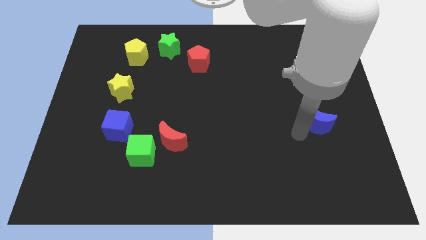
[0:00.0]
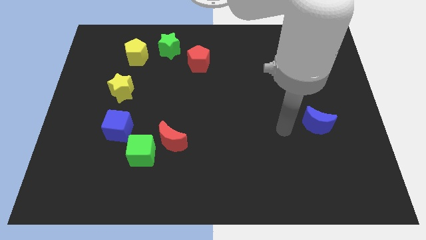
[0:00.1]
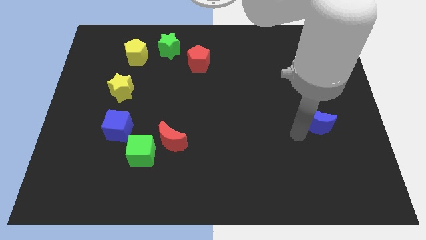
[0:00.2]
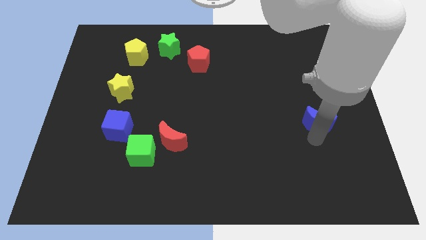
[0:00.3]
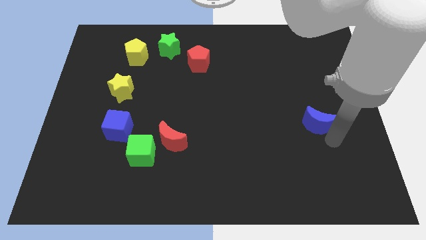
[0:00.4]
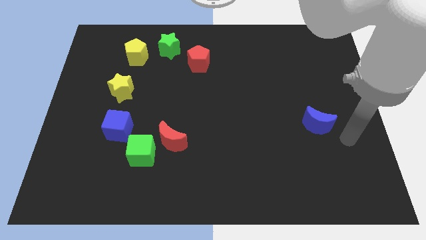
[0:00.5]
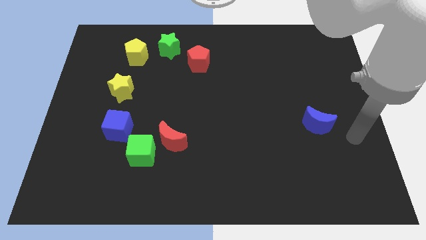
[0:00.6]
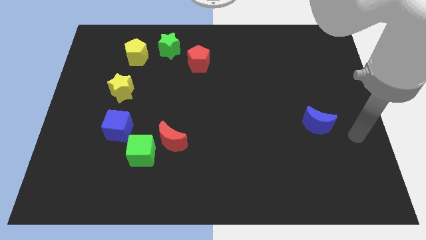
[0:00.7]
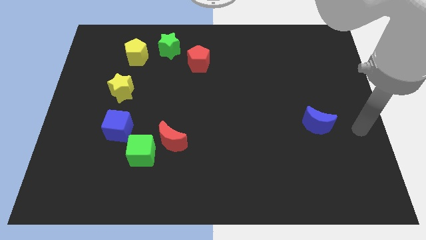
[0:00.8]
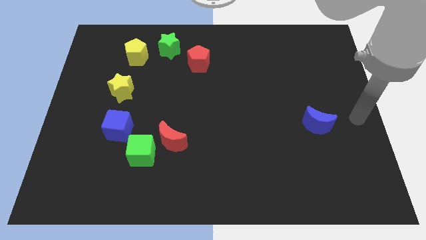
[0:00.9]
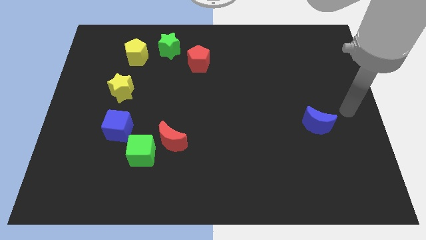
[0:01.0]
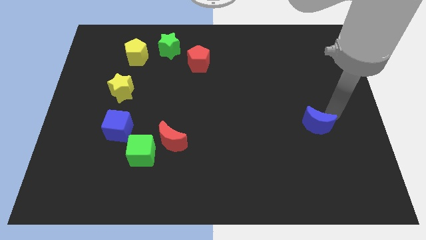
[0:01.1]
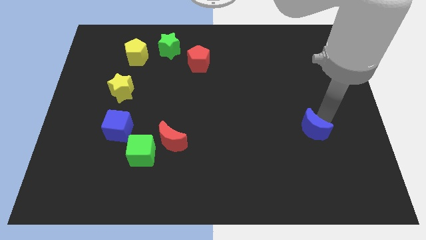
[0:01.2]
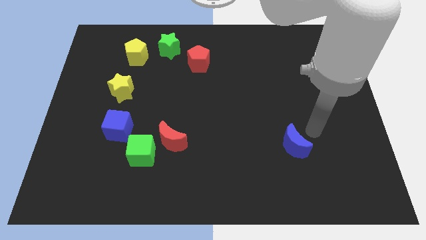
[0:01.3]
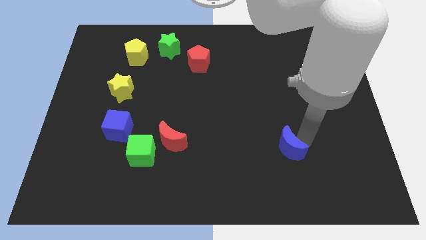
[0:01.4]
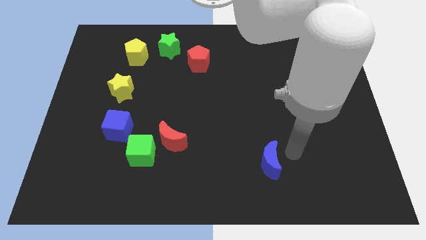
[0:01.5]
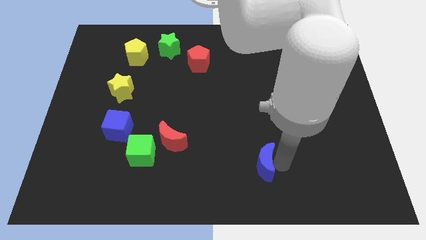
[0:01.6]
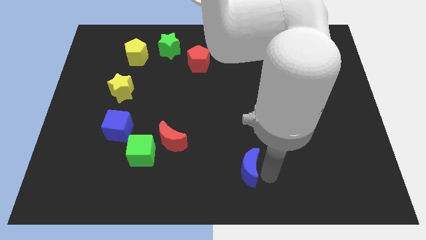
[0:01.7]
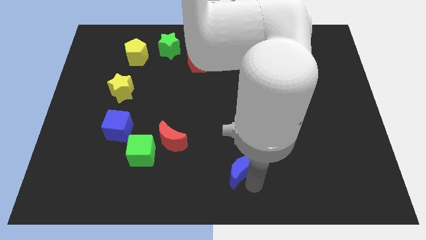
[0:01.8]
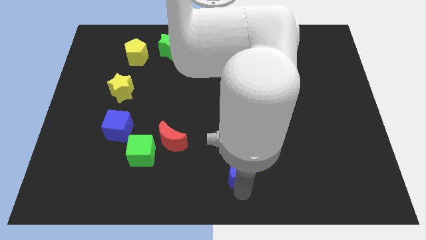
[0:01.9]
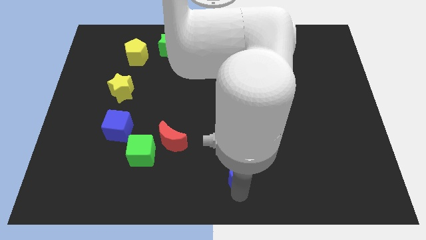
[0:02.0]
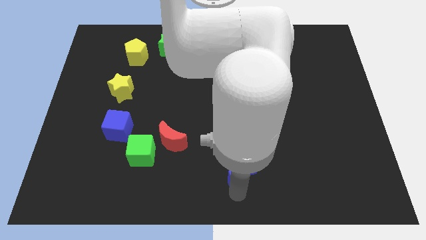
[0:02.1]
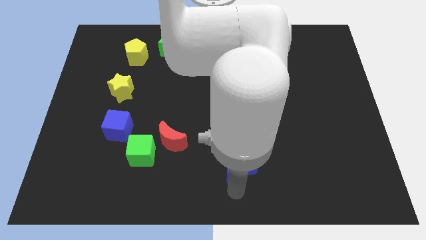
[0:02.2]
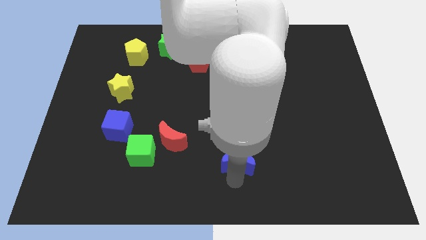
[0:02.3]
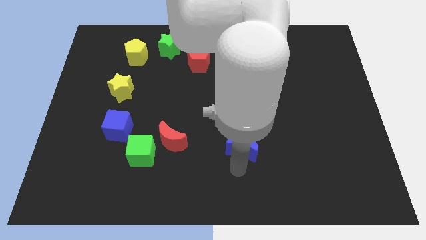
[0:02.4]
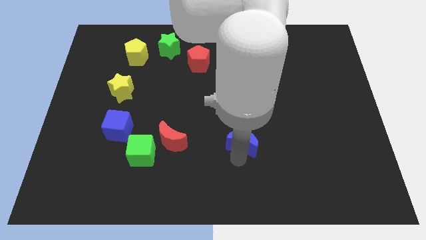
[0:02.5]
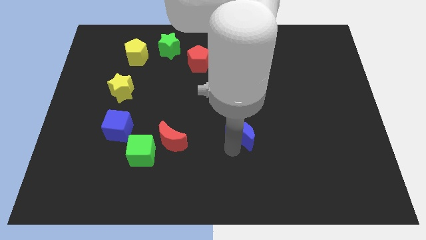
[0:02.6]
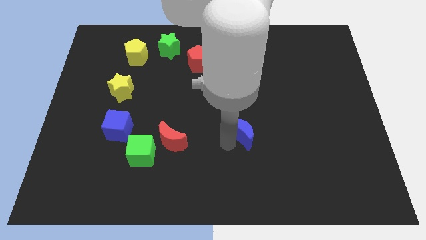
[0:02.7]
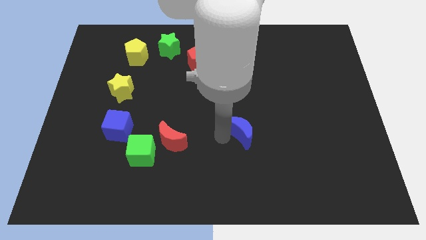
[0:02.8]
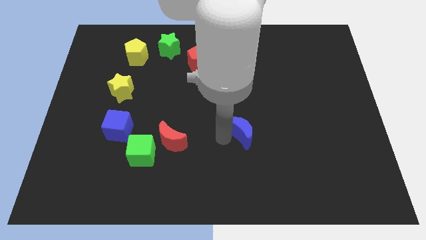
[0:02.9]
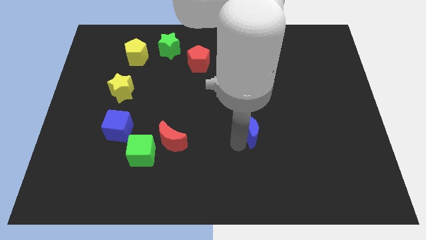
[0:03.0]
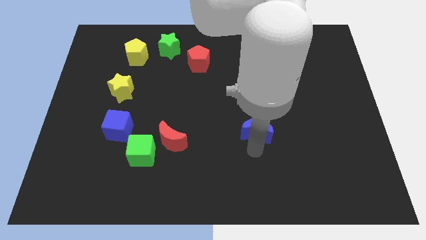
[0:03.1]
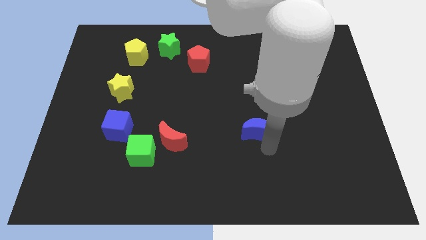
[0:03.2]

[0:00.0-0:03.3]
place the blue moon close to the red moon

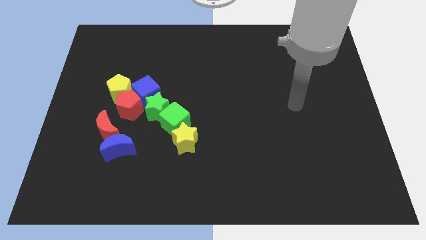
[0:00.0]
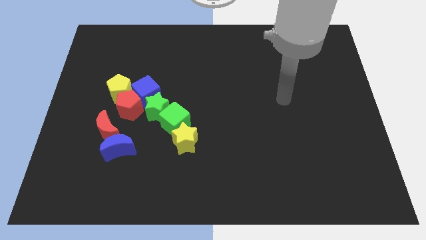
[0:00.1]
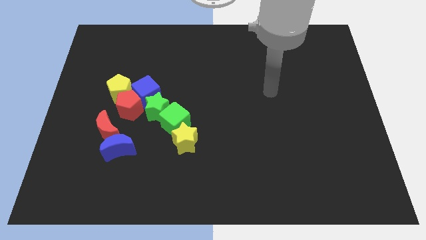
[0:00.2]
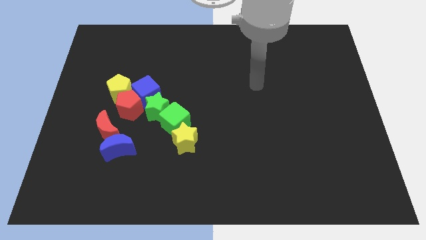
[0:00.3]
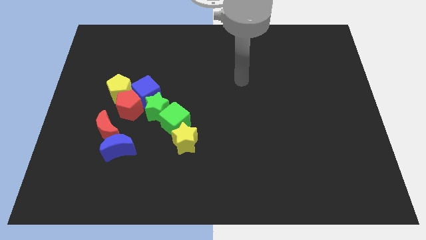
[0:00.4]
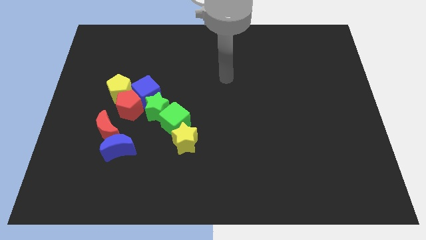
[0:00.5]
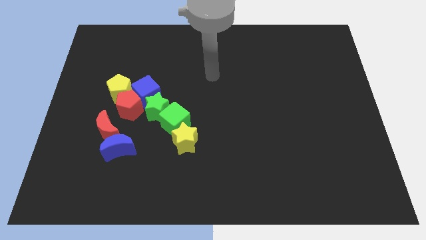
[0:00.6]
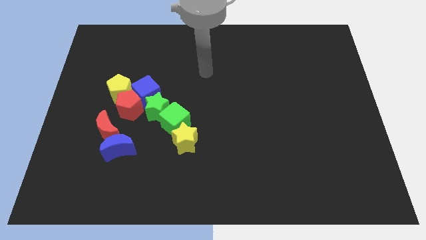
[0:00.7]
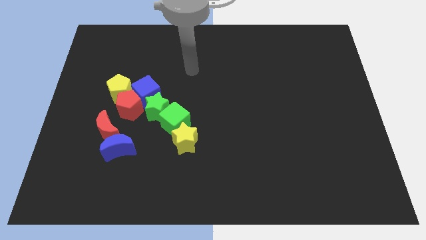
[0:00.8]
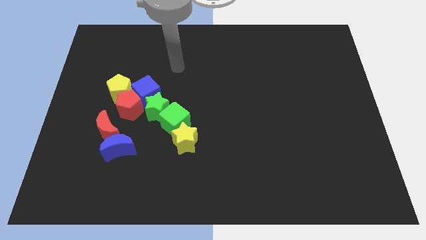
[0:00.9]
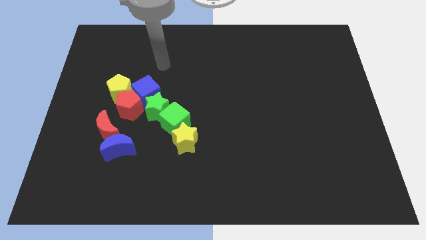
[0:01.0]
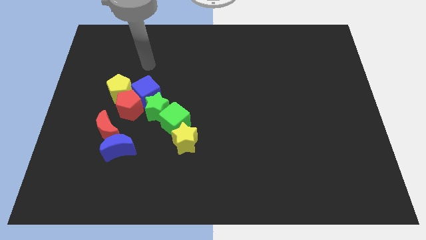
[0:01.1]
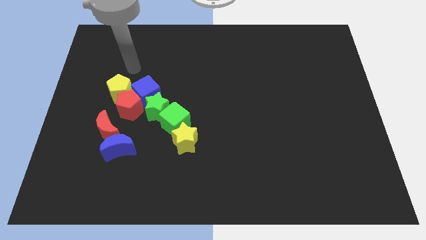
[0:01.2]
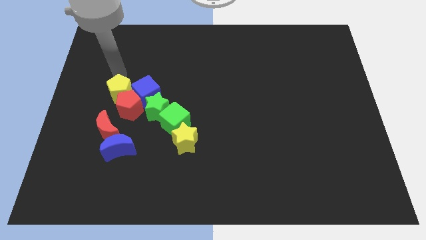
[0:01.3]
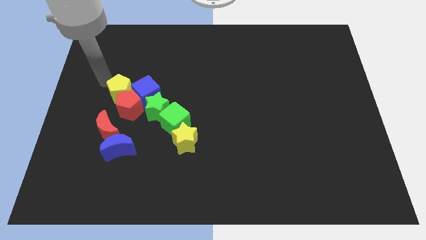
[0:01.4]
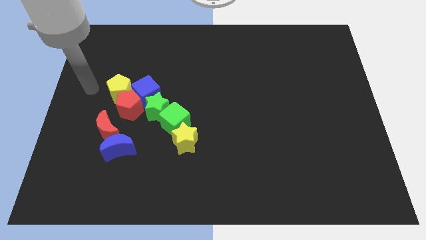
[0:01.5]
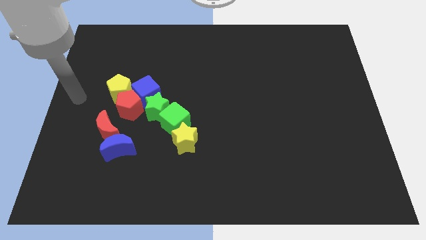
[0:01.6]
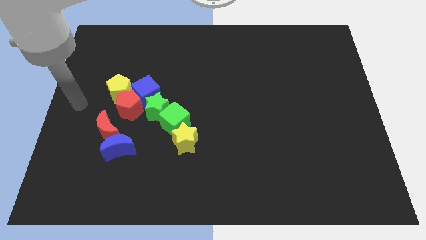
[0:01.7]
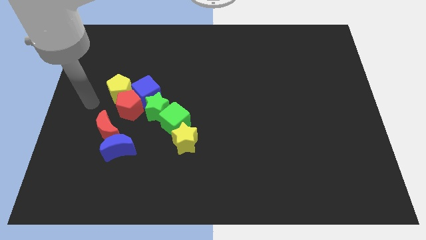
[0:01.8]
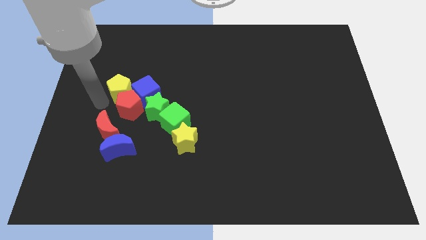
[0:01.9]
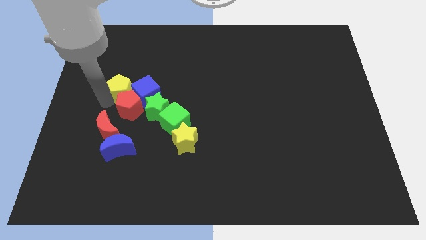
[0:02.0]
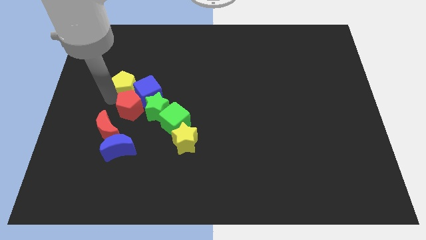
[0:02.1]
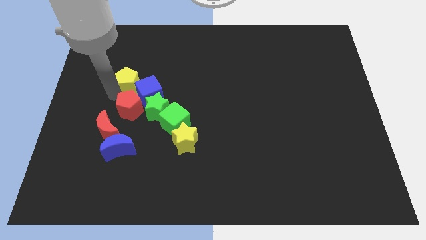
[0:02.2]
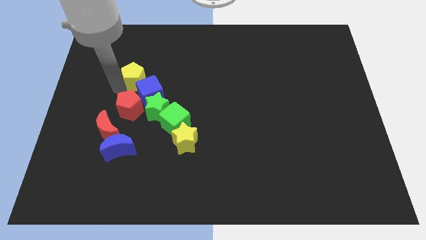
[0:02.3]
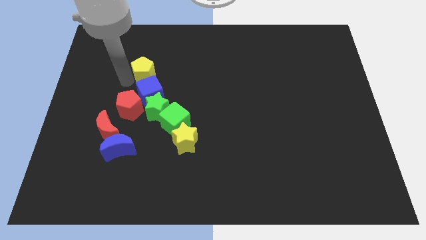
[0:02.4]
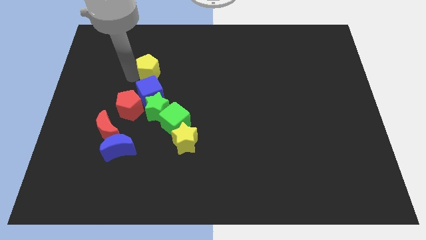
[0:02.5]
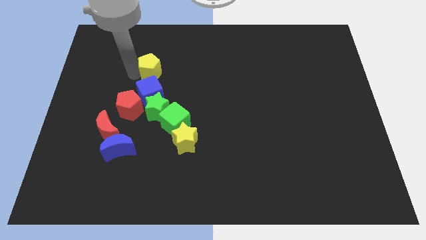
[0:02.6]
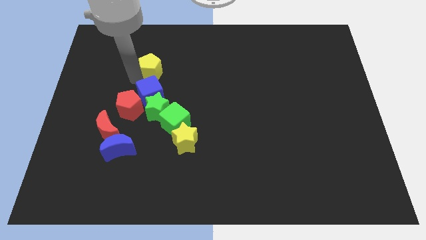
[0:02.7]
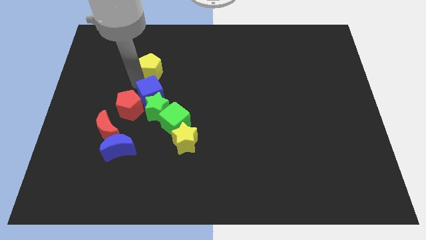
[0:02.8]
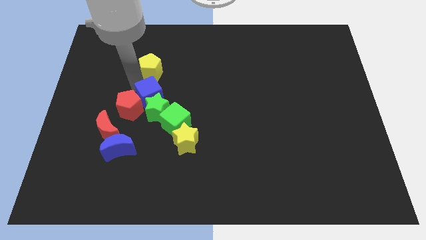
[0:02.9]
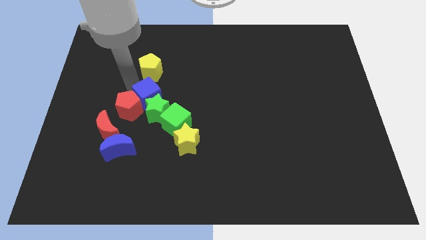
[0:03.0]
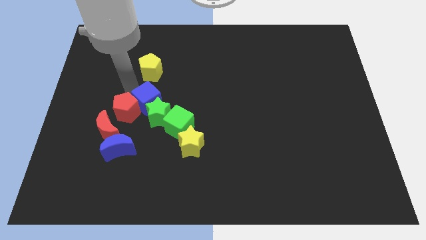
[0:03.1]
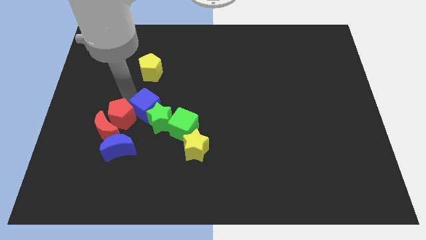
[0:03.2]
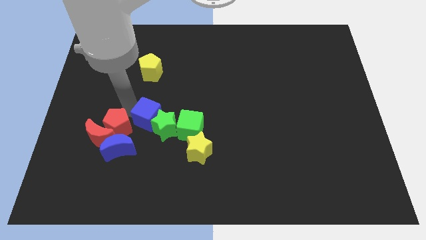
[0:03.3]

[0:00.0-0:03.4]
separate the blue cube and yellow pentagon

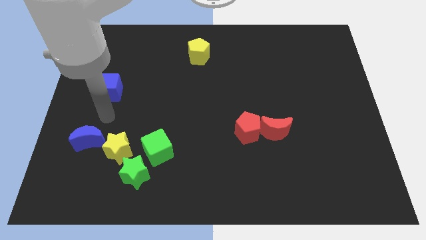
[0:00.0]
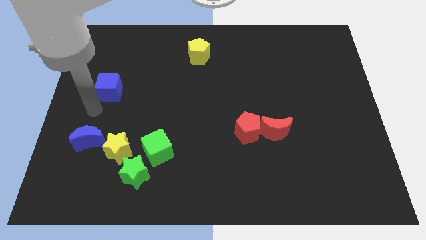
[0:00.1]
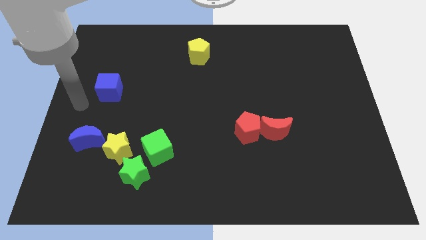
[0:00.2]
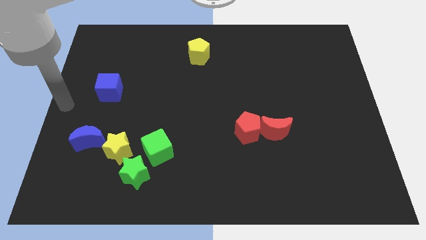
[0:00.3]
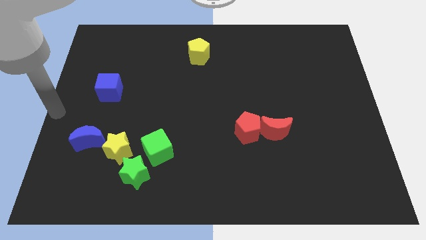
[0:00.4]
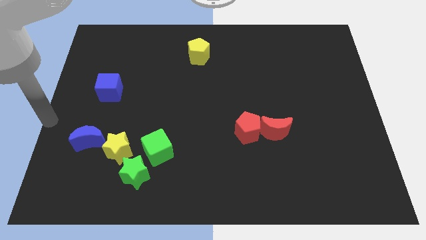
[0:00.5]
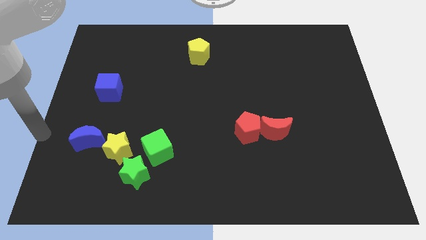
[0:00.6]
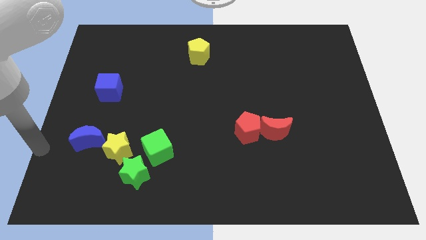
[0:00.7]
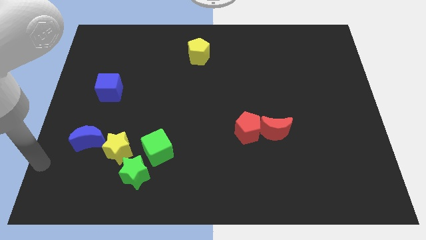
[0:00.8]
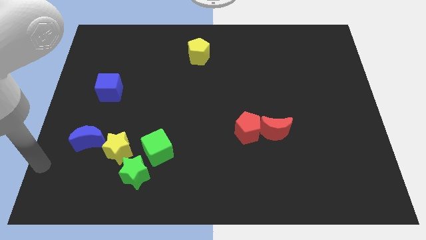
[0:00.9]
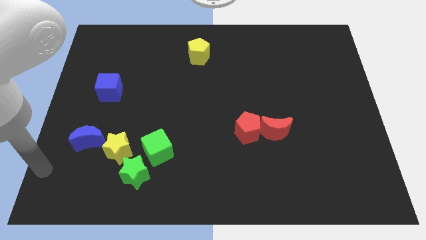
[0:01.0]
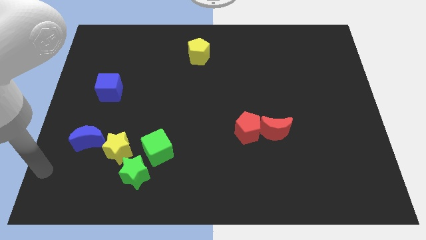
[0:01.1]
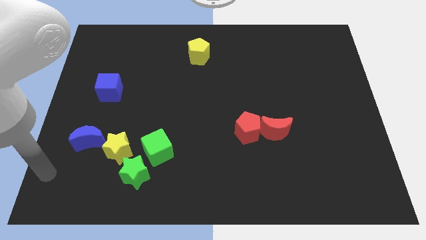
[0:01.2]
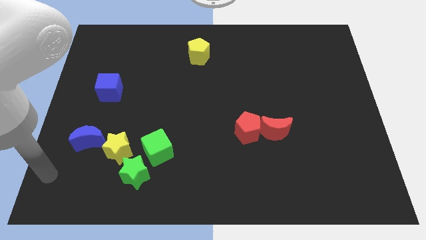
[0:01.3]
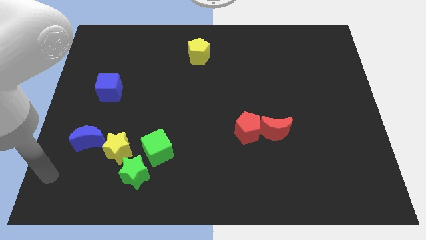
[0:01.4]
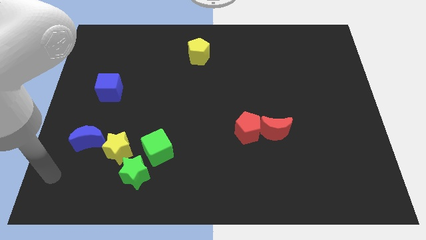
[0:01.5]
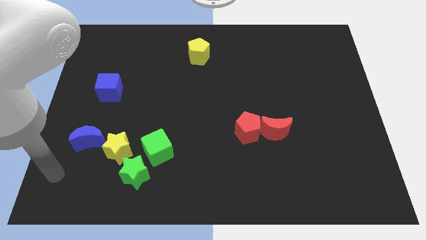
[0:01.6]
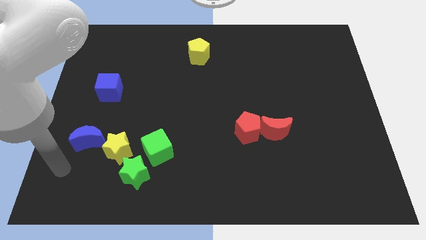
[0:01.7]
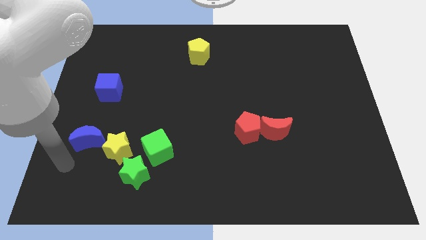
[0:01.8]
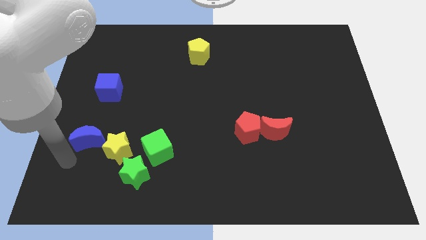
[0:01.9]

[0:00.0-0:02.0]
point your arm at the bottom of the blue crescent

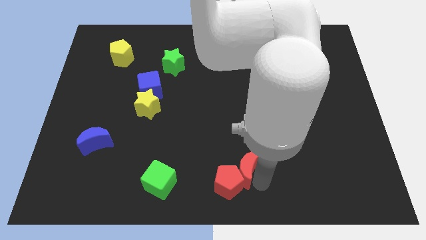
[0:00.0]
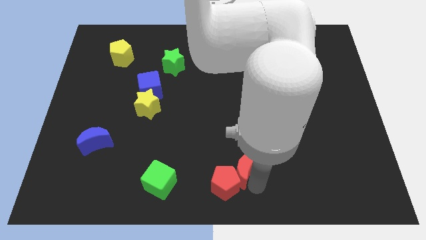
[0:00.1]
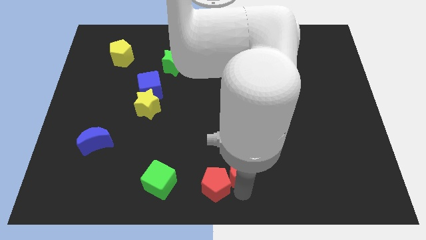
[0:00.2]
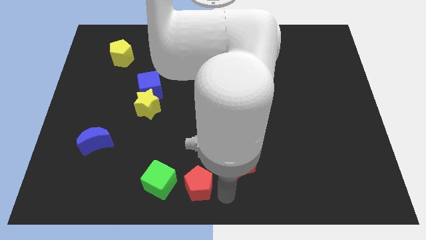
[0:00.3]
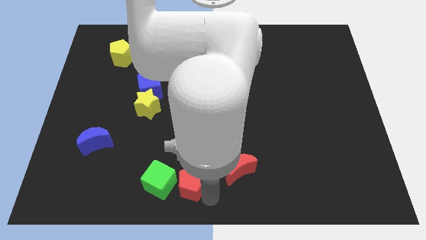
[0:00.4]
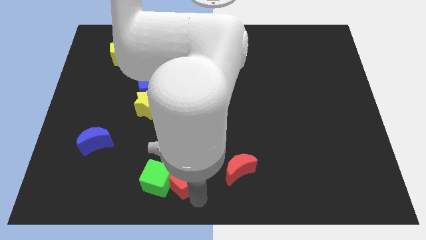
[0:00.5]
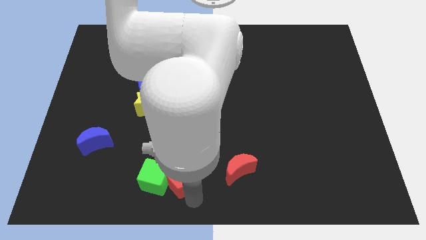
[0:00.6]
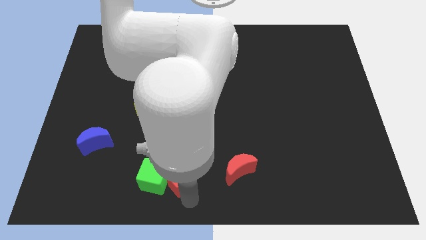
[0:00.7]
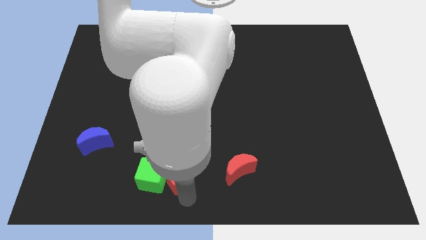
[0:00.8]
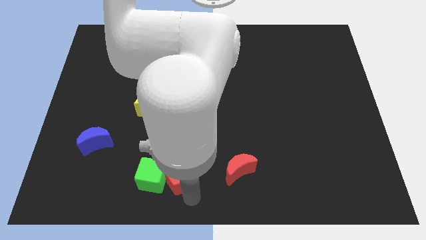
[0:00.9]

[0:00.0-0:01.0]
push red pentagon into the green cube
